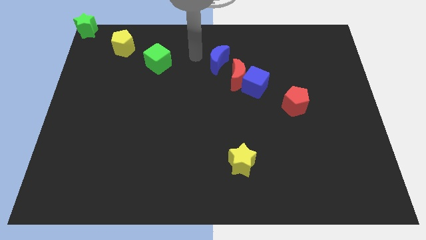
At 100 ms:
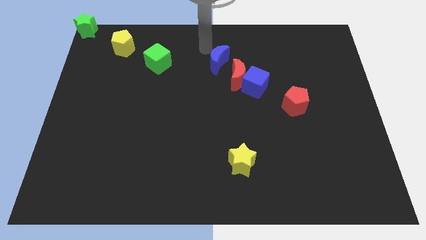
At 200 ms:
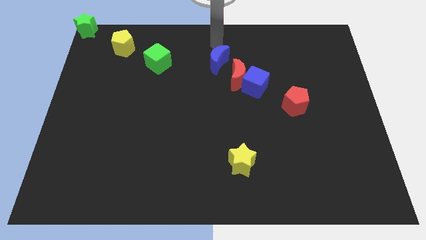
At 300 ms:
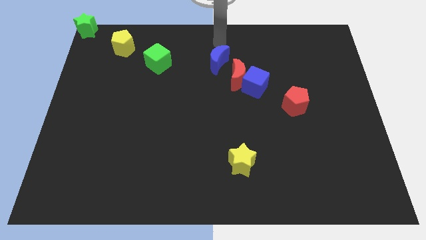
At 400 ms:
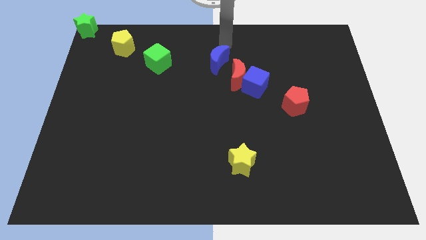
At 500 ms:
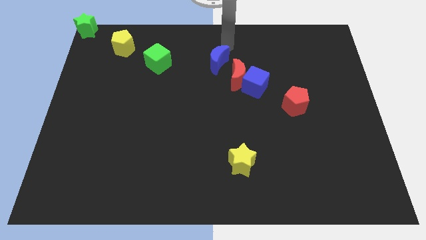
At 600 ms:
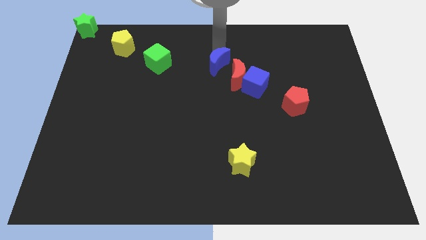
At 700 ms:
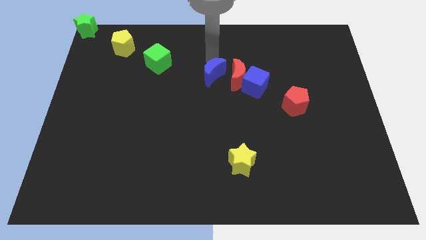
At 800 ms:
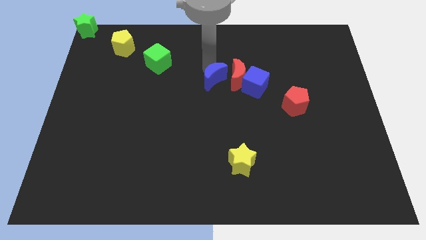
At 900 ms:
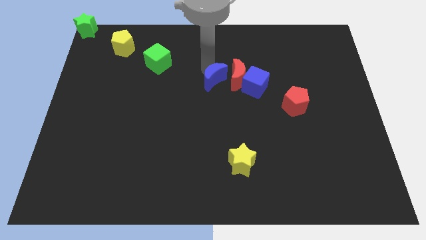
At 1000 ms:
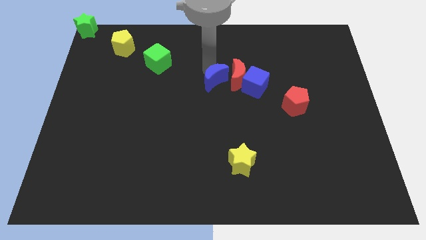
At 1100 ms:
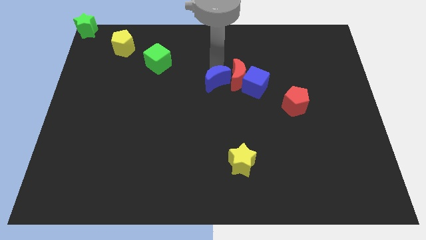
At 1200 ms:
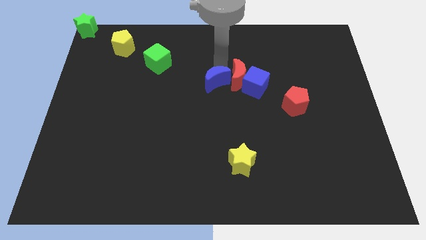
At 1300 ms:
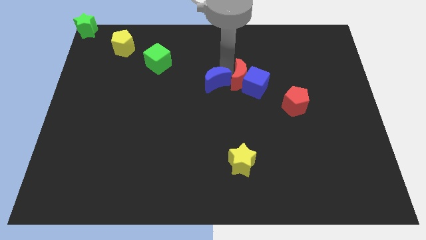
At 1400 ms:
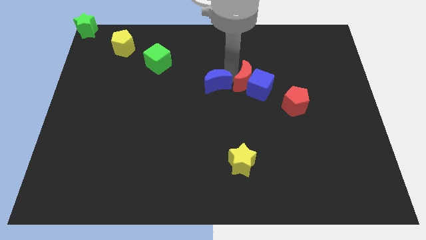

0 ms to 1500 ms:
push the blue crescent into the left side of the red crescent

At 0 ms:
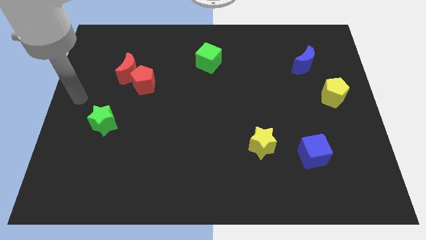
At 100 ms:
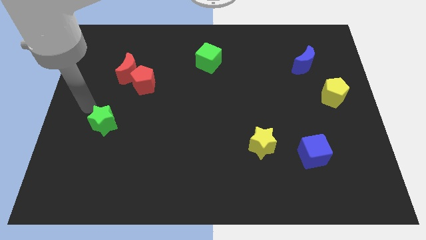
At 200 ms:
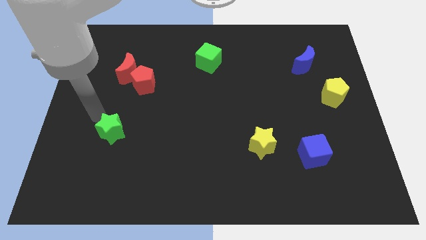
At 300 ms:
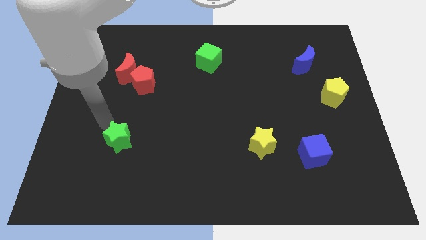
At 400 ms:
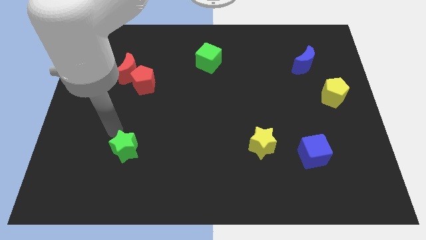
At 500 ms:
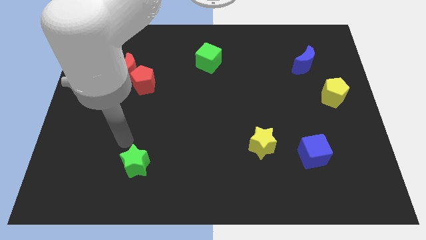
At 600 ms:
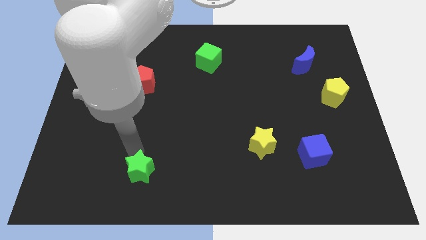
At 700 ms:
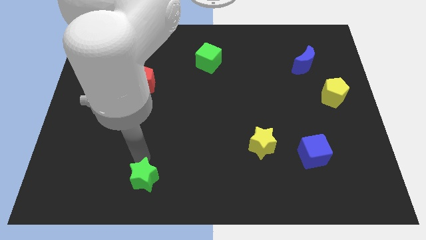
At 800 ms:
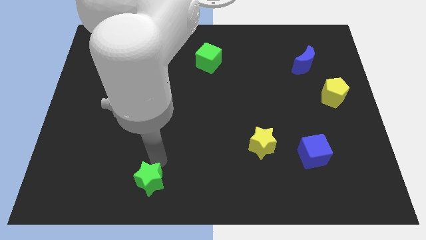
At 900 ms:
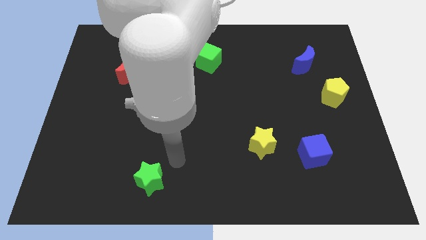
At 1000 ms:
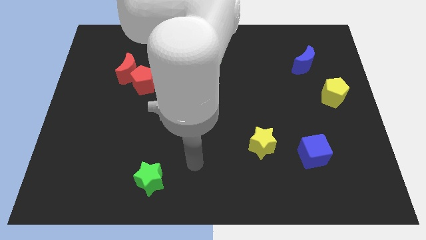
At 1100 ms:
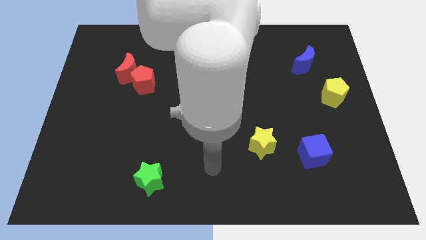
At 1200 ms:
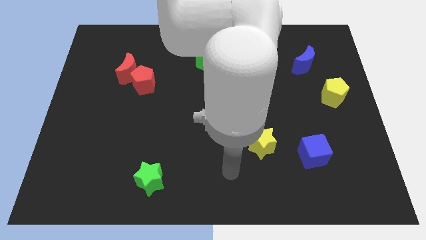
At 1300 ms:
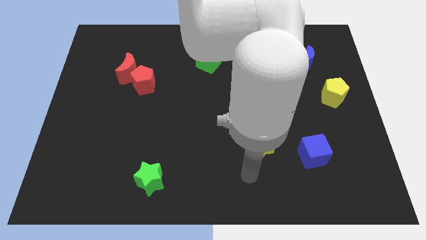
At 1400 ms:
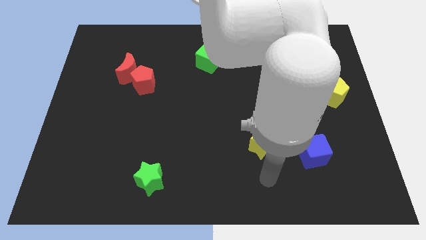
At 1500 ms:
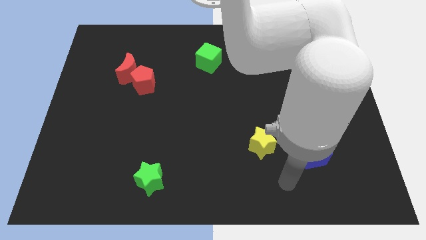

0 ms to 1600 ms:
move the green star towards the bottom side

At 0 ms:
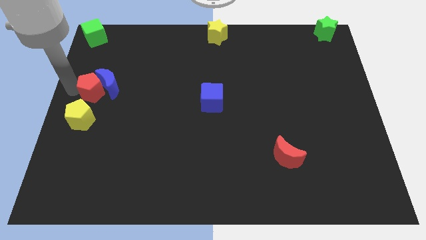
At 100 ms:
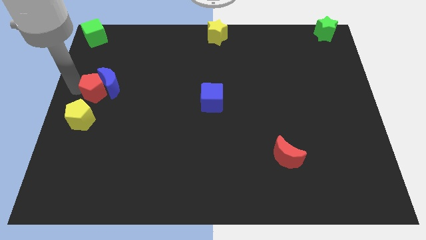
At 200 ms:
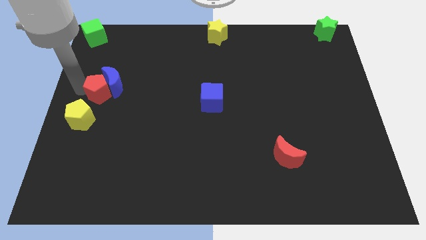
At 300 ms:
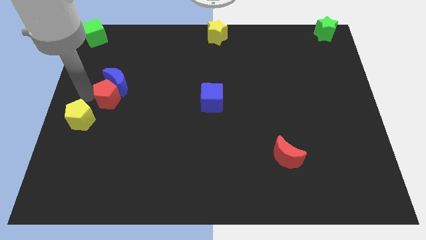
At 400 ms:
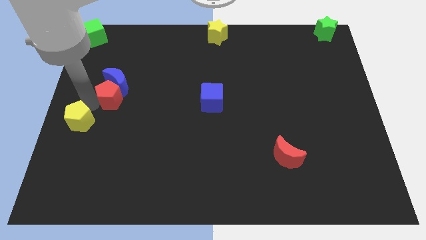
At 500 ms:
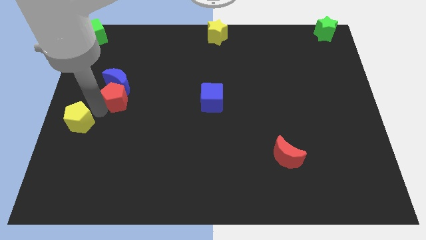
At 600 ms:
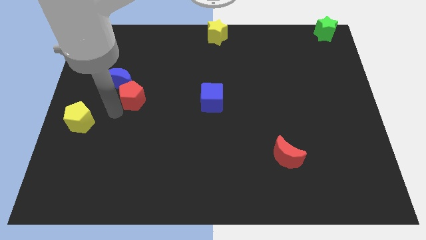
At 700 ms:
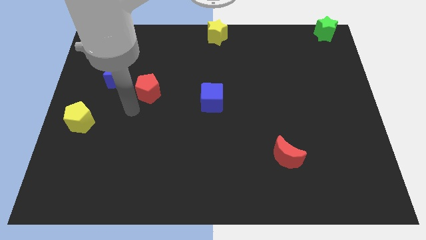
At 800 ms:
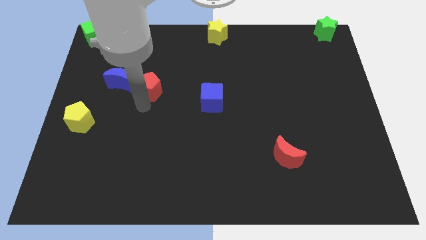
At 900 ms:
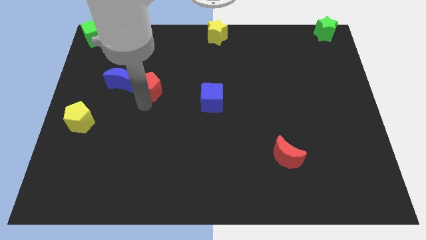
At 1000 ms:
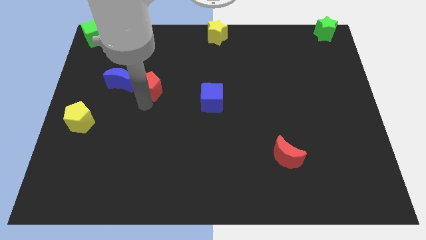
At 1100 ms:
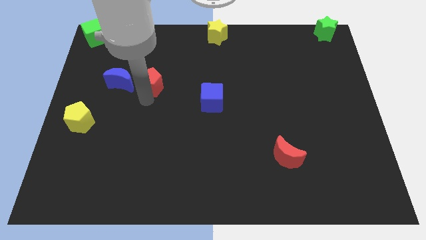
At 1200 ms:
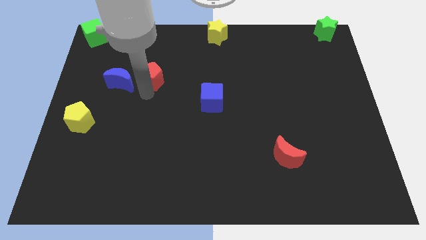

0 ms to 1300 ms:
push the red pentagon to the right of the blue crescent

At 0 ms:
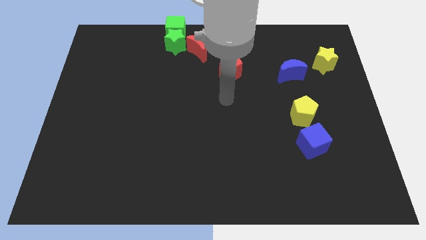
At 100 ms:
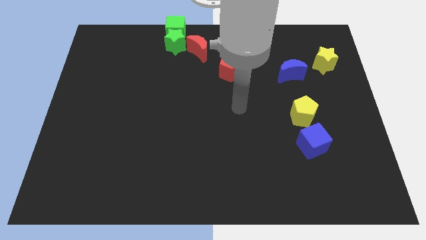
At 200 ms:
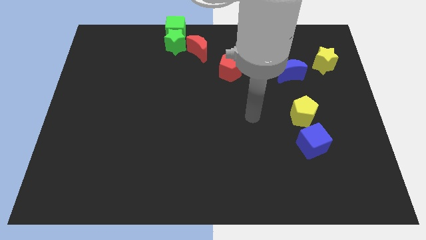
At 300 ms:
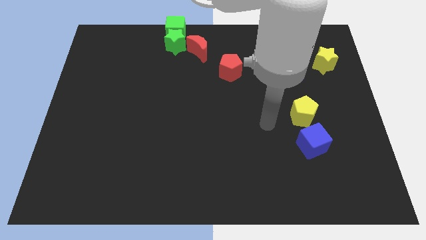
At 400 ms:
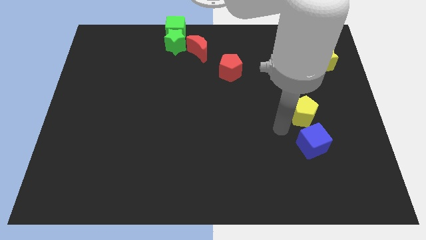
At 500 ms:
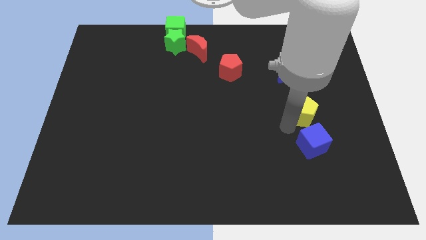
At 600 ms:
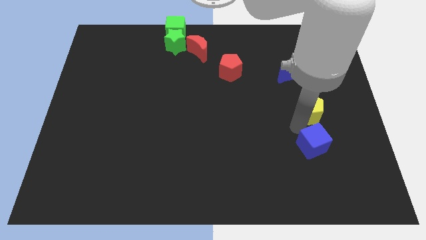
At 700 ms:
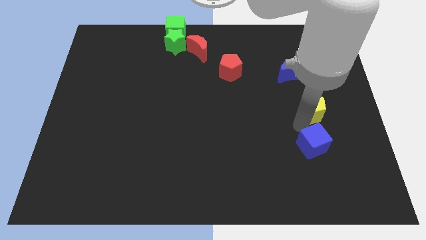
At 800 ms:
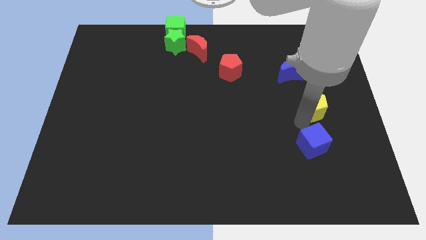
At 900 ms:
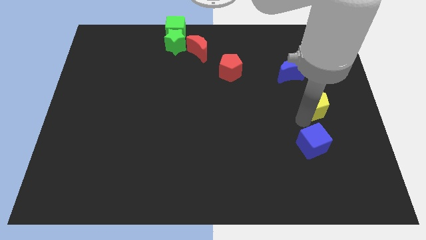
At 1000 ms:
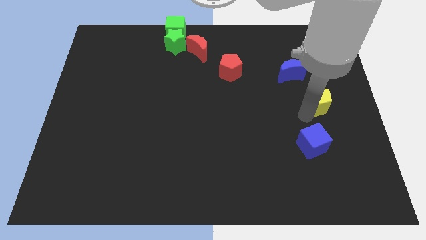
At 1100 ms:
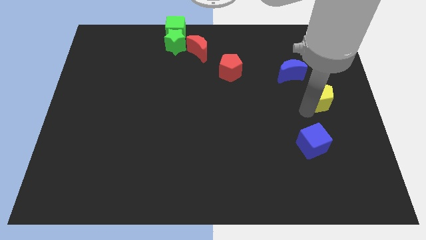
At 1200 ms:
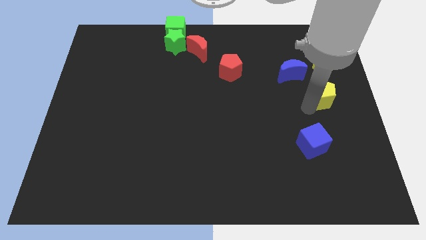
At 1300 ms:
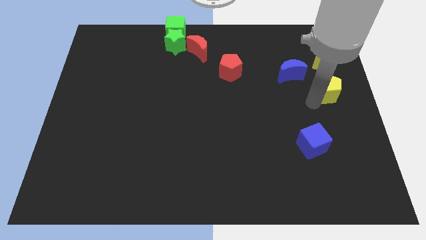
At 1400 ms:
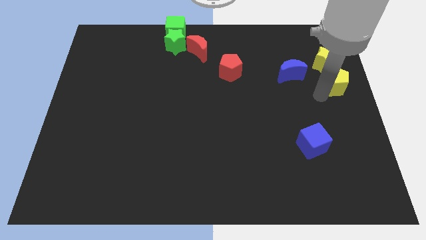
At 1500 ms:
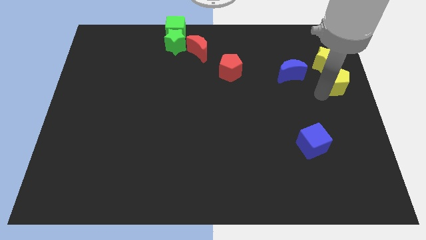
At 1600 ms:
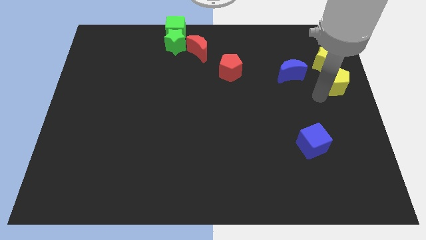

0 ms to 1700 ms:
move the yellow pentagon away from the blue cube

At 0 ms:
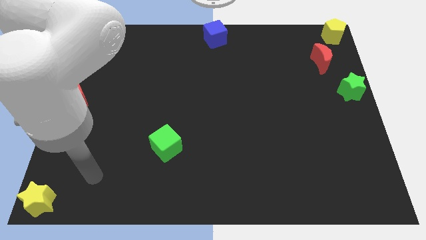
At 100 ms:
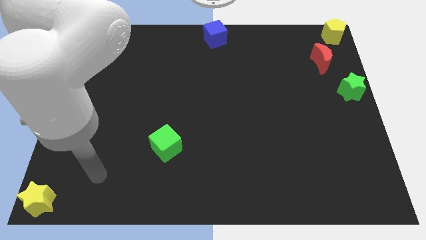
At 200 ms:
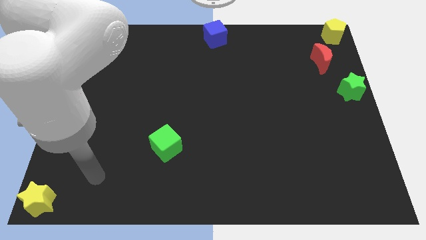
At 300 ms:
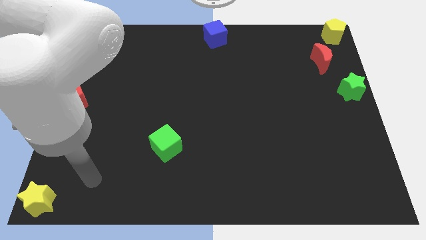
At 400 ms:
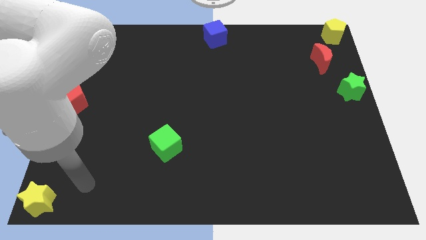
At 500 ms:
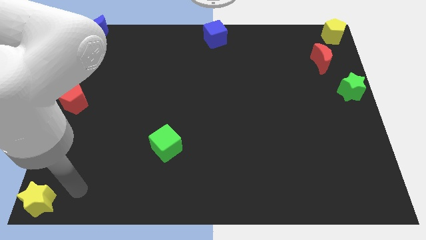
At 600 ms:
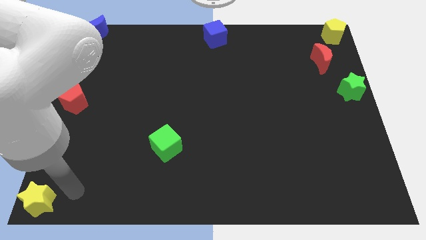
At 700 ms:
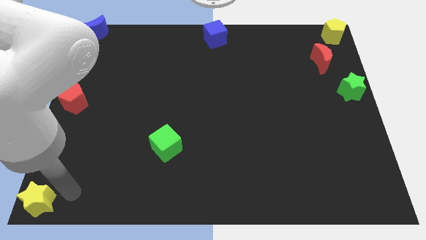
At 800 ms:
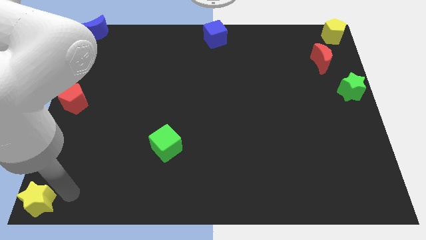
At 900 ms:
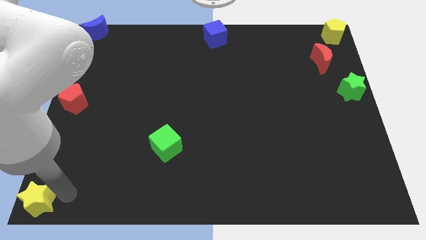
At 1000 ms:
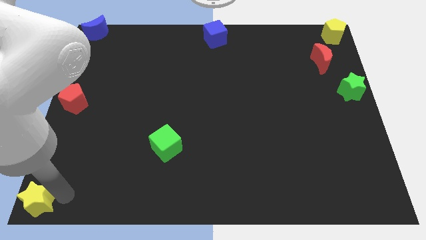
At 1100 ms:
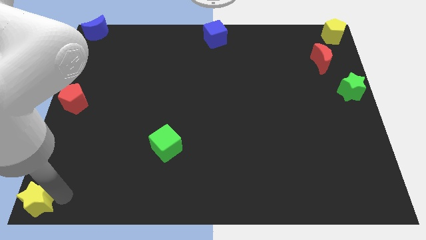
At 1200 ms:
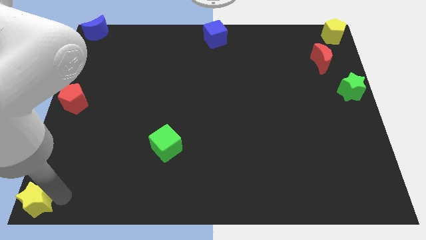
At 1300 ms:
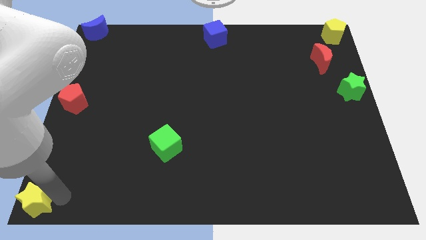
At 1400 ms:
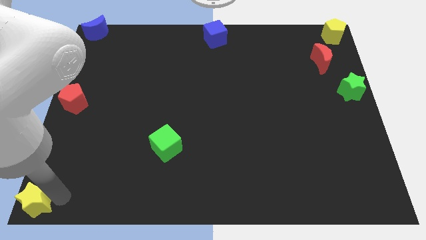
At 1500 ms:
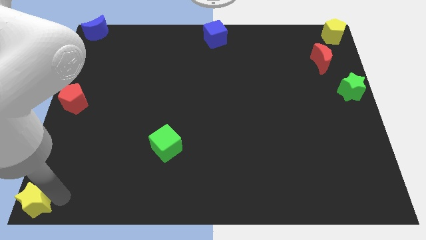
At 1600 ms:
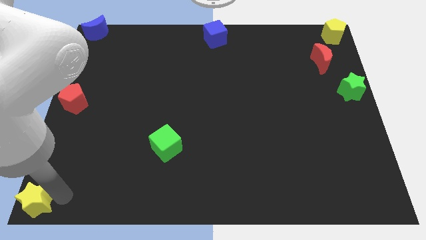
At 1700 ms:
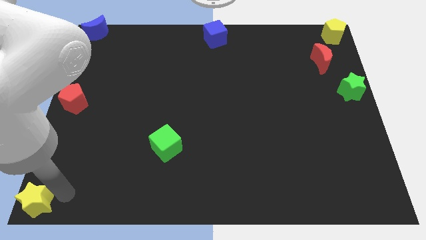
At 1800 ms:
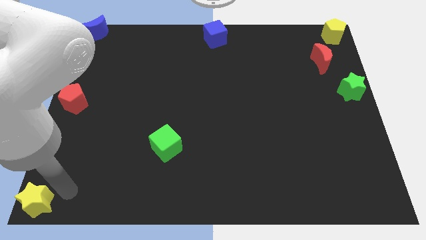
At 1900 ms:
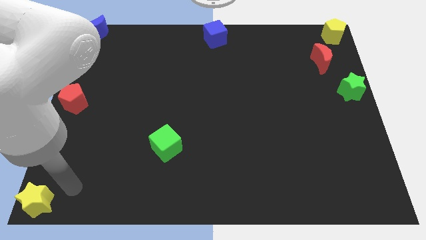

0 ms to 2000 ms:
adjust the yellow star at the bottom left corner of the board

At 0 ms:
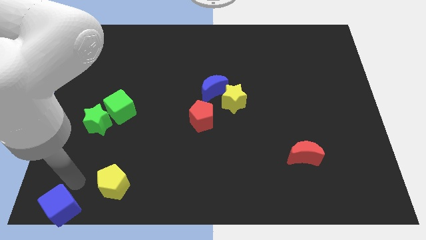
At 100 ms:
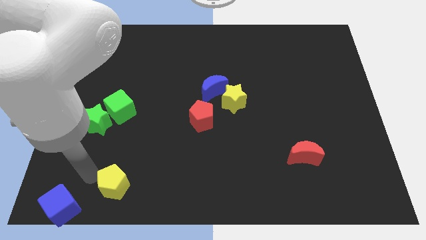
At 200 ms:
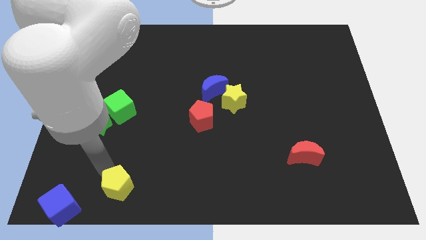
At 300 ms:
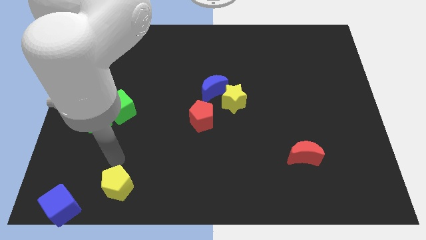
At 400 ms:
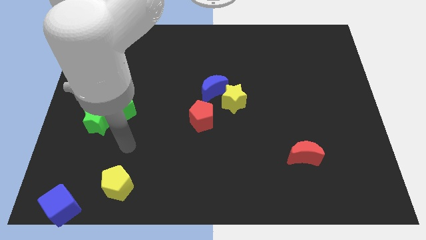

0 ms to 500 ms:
move the yellow pentagon slightly towards bottom

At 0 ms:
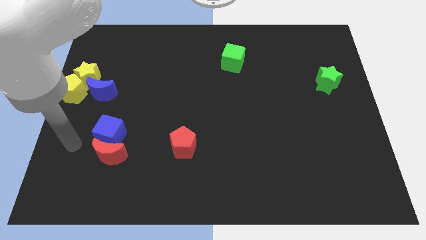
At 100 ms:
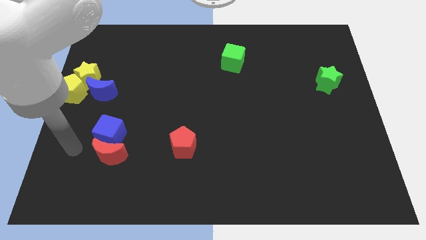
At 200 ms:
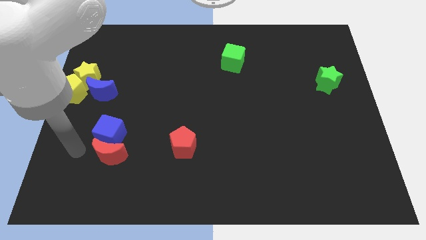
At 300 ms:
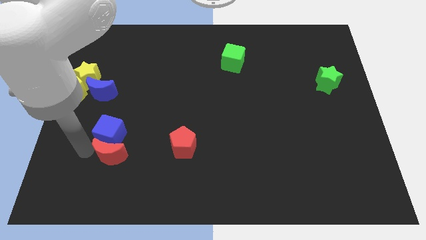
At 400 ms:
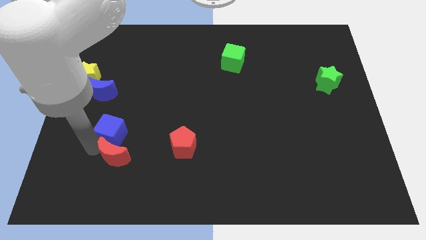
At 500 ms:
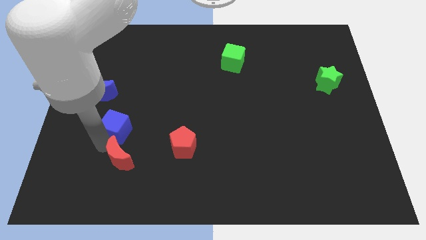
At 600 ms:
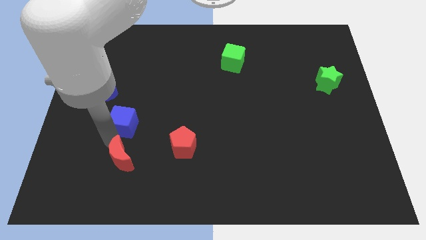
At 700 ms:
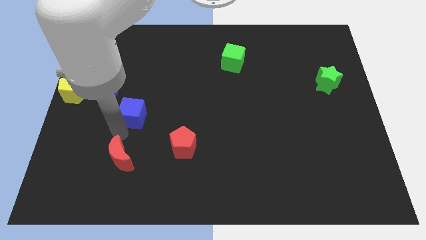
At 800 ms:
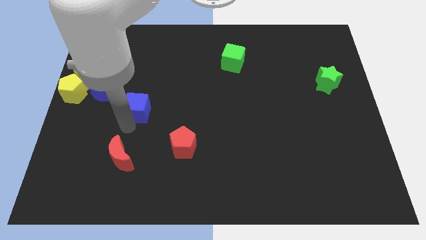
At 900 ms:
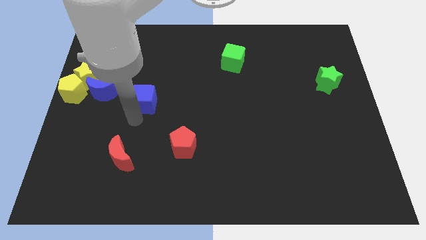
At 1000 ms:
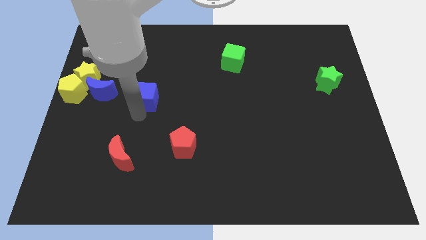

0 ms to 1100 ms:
move blue cube parallel right to blue moon
